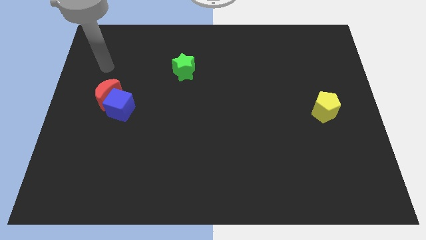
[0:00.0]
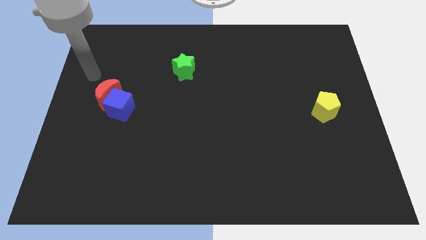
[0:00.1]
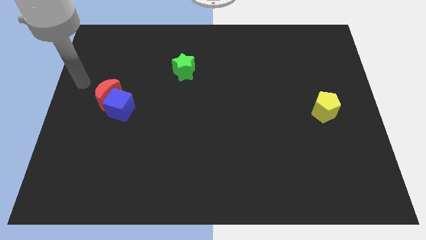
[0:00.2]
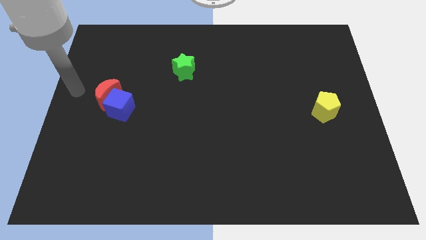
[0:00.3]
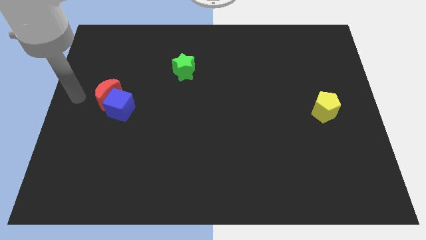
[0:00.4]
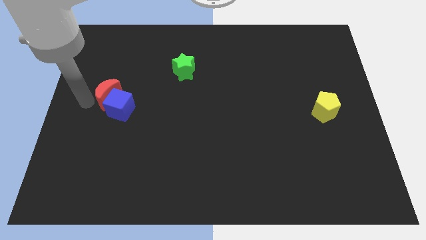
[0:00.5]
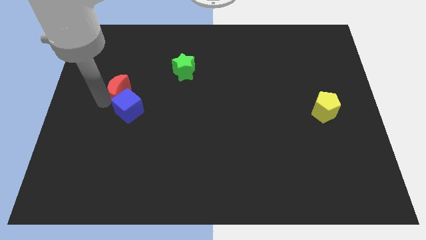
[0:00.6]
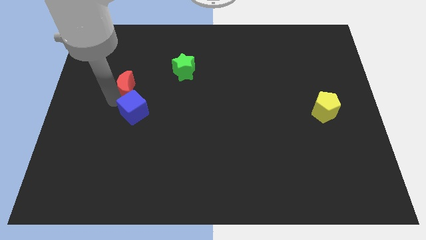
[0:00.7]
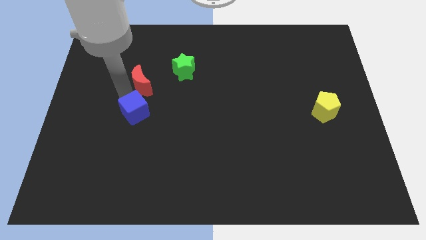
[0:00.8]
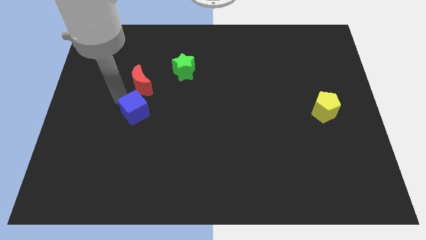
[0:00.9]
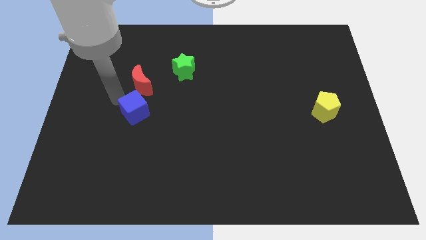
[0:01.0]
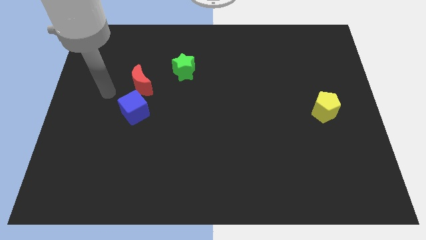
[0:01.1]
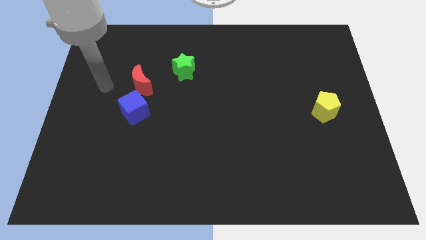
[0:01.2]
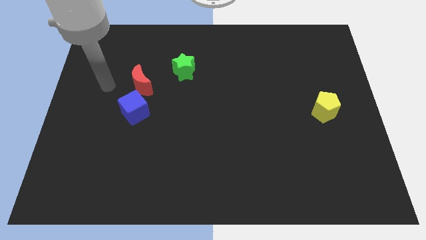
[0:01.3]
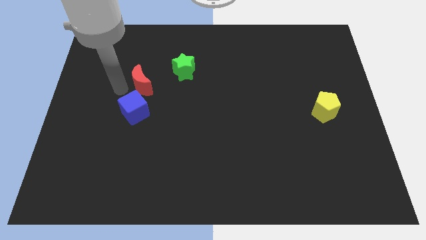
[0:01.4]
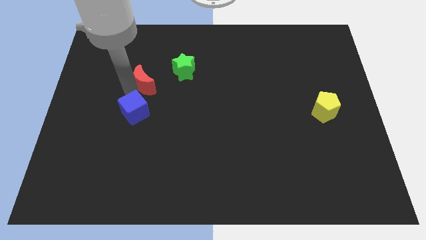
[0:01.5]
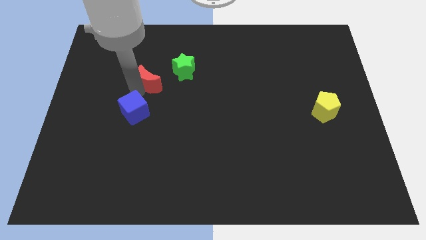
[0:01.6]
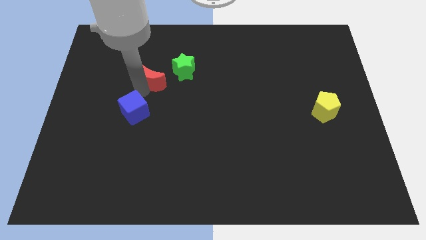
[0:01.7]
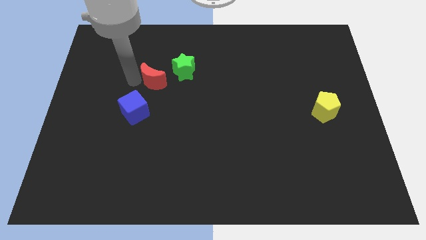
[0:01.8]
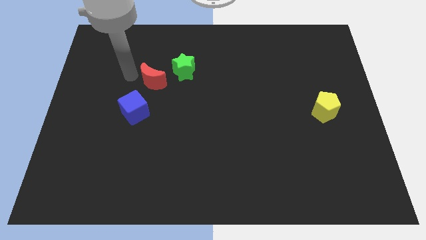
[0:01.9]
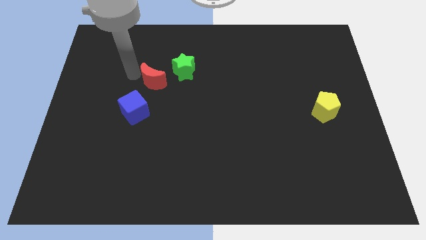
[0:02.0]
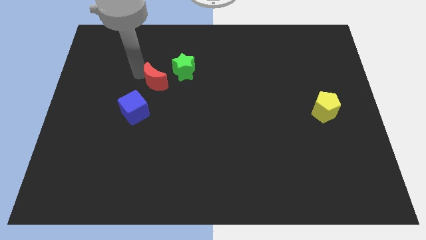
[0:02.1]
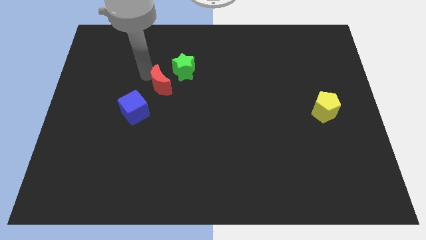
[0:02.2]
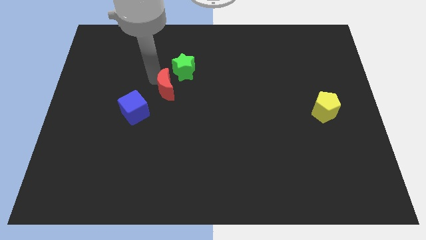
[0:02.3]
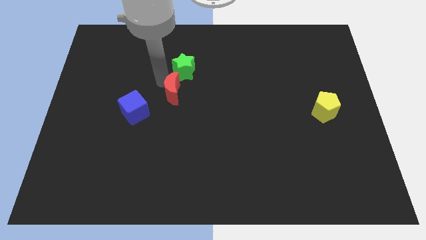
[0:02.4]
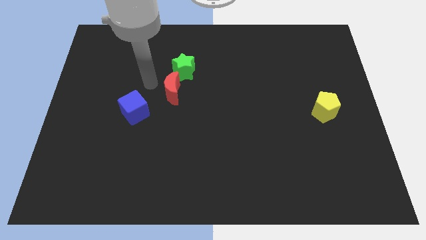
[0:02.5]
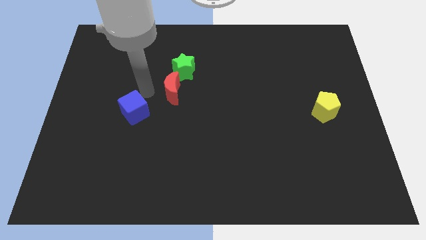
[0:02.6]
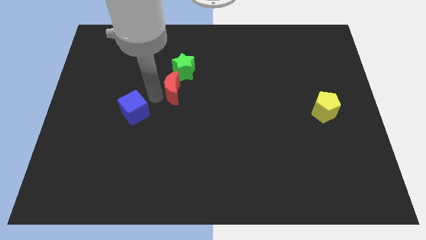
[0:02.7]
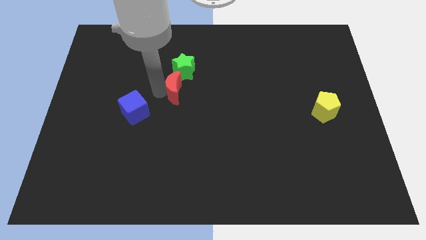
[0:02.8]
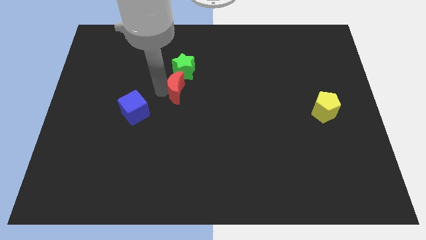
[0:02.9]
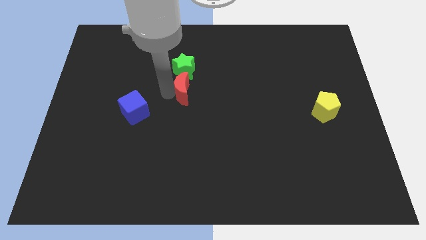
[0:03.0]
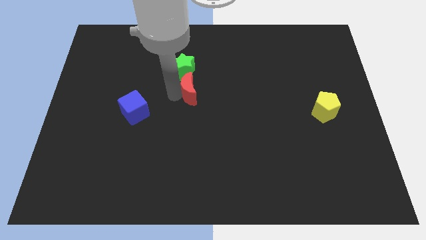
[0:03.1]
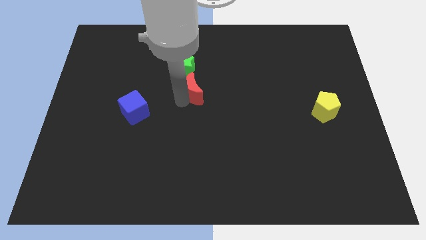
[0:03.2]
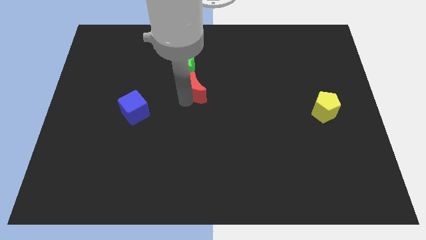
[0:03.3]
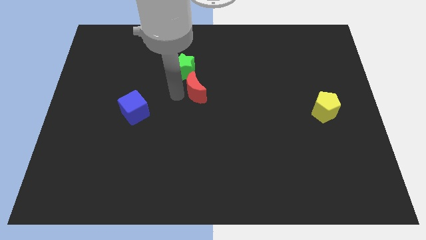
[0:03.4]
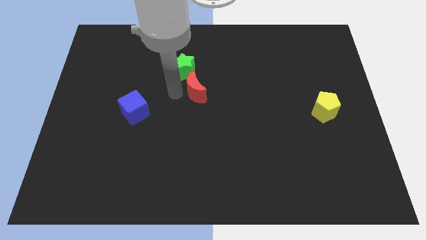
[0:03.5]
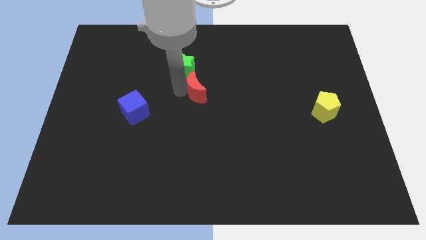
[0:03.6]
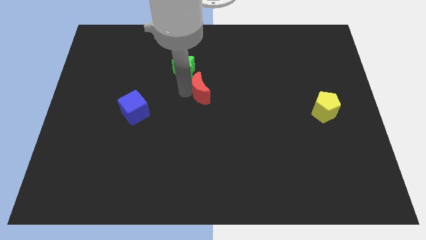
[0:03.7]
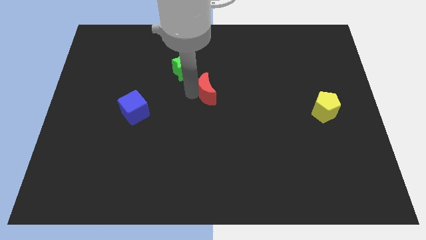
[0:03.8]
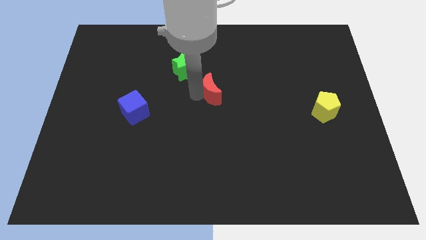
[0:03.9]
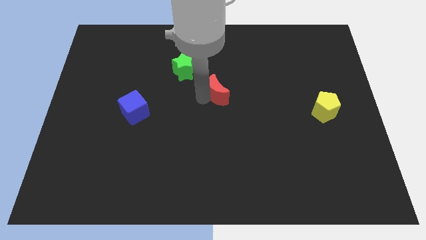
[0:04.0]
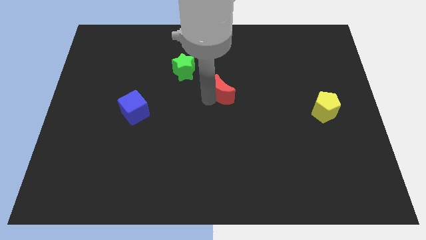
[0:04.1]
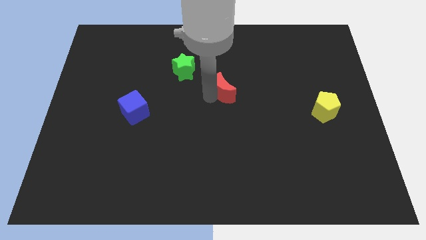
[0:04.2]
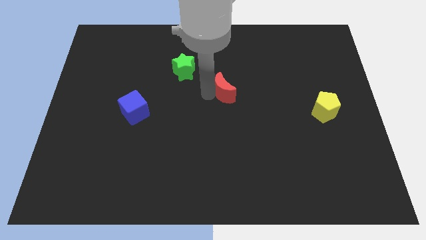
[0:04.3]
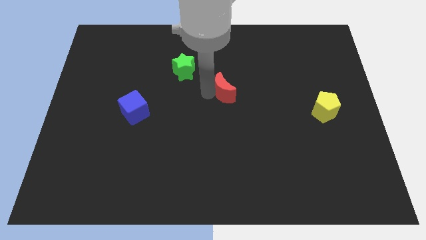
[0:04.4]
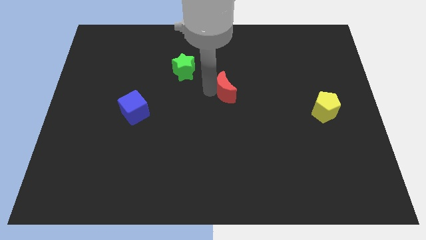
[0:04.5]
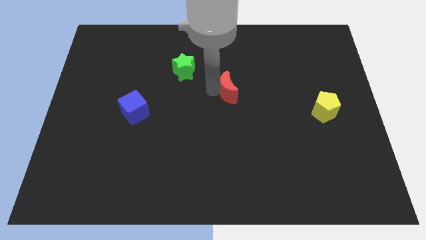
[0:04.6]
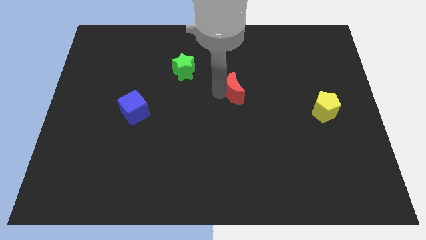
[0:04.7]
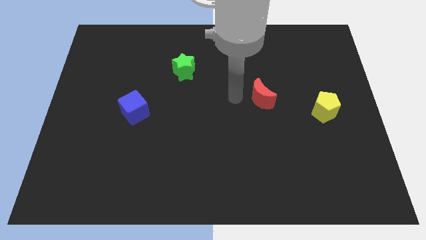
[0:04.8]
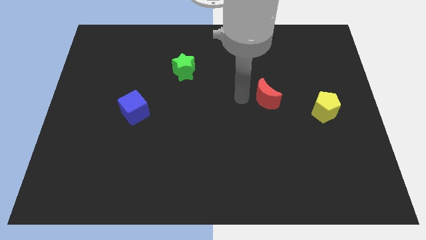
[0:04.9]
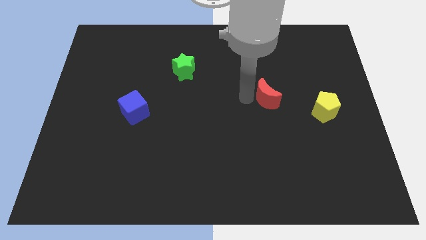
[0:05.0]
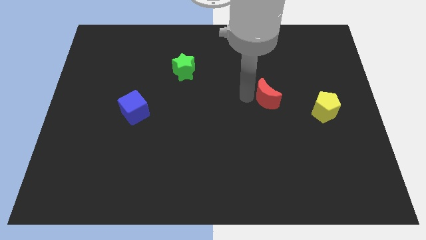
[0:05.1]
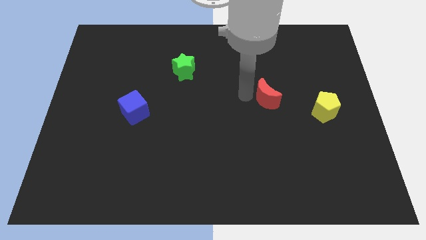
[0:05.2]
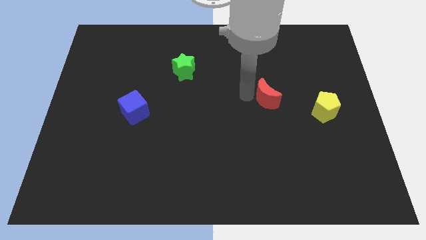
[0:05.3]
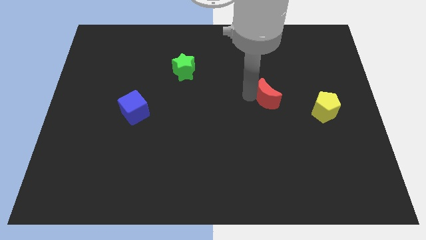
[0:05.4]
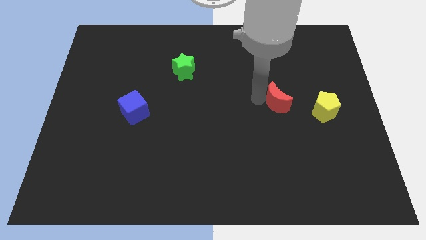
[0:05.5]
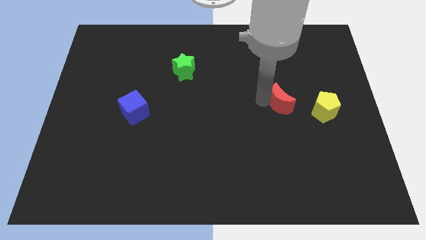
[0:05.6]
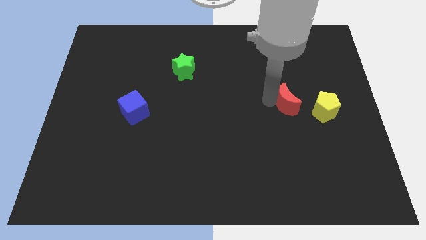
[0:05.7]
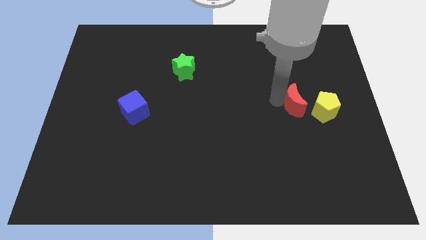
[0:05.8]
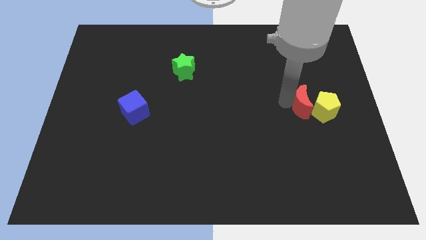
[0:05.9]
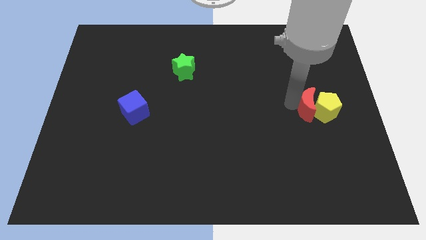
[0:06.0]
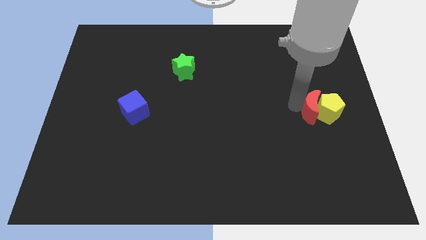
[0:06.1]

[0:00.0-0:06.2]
slide the moon to the pentagon

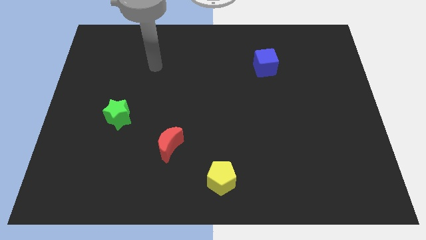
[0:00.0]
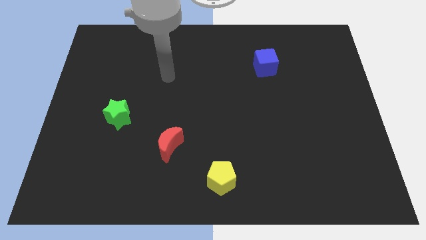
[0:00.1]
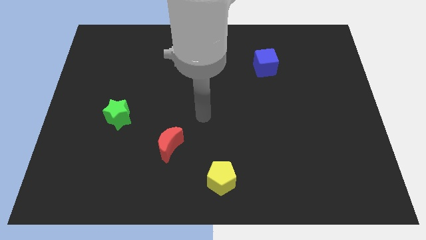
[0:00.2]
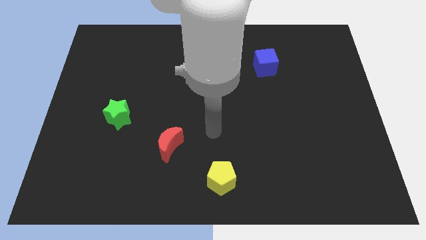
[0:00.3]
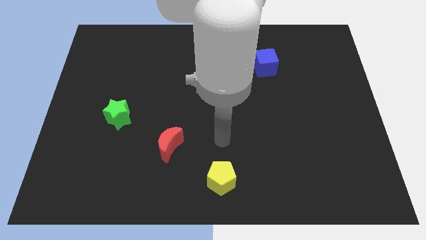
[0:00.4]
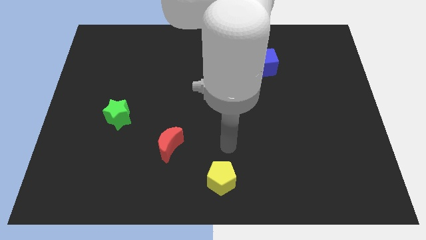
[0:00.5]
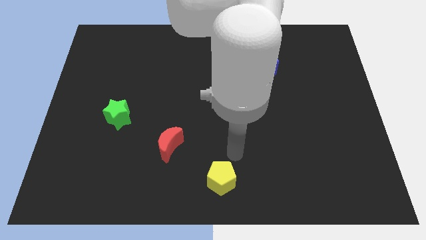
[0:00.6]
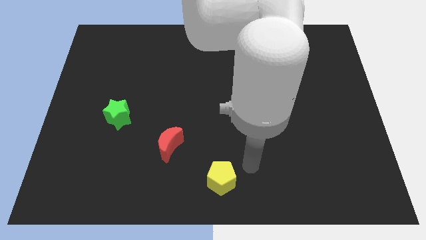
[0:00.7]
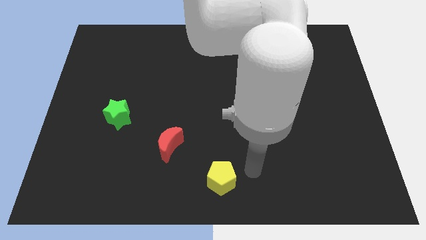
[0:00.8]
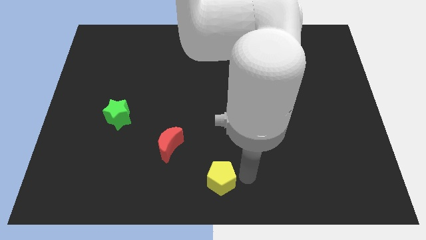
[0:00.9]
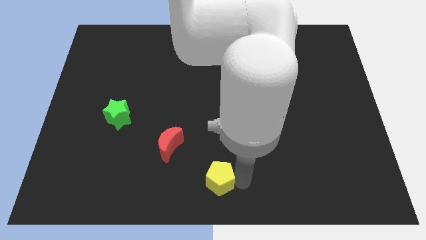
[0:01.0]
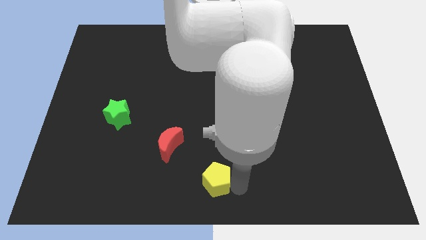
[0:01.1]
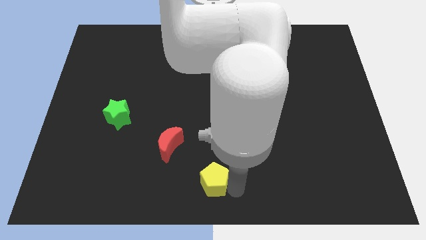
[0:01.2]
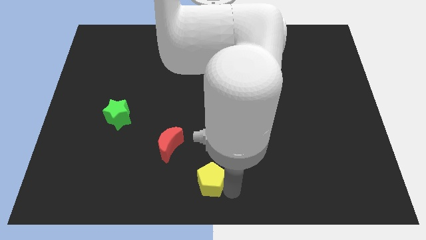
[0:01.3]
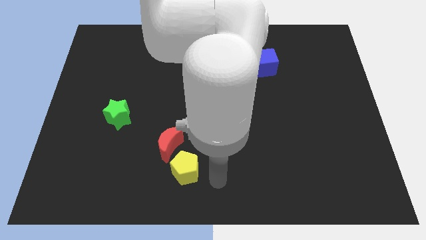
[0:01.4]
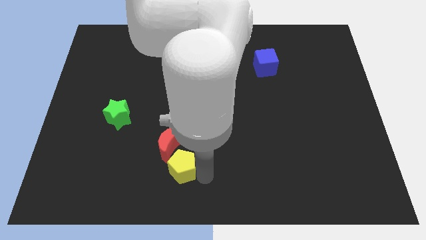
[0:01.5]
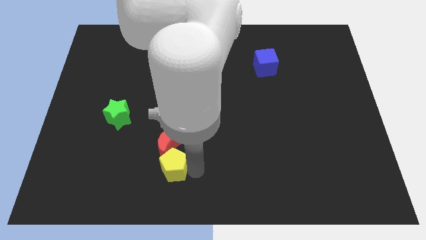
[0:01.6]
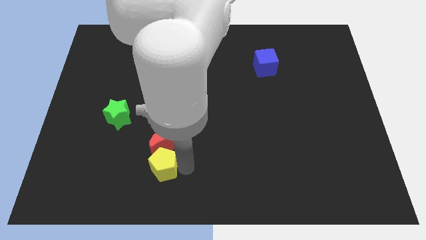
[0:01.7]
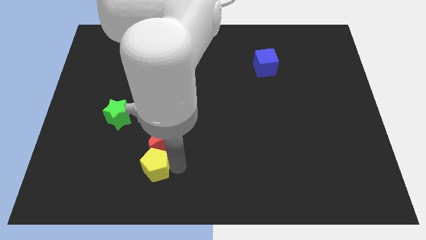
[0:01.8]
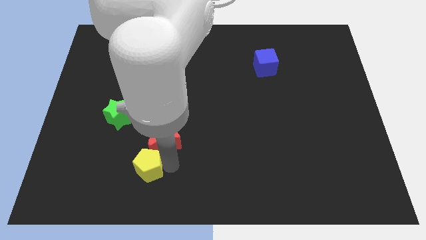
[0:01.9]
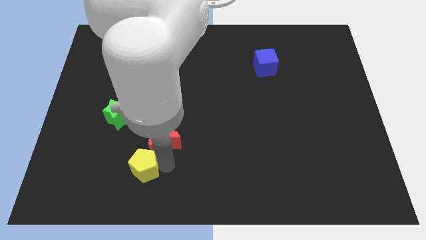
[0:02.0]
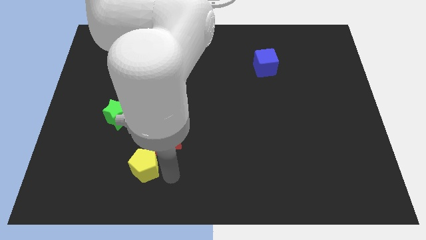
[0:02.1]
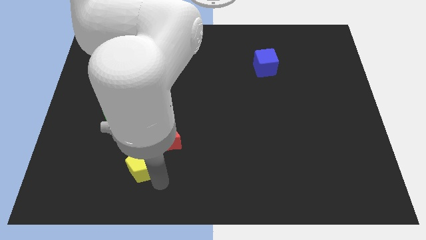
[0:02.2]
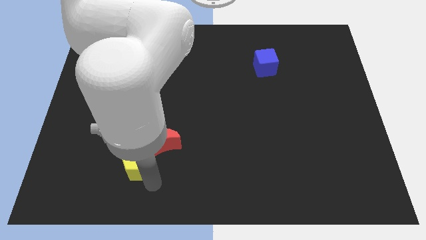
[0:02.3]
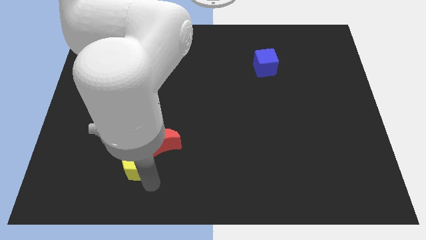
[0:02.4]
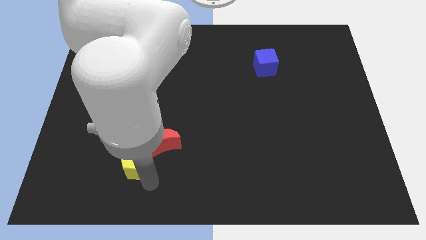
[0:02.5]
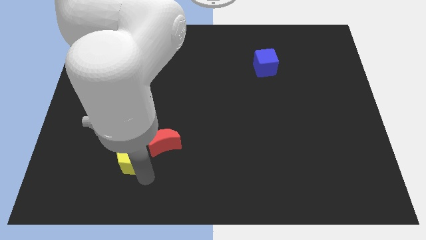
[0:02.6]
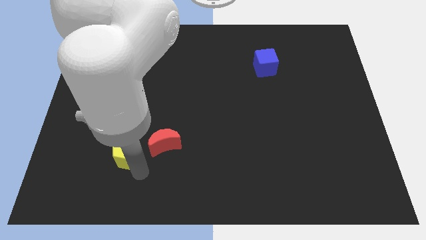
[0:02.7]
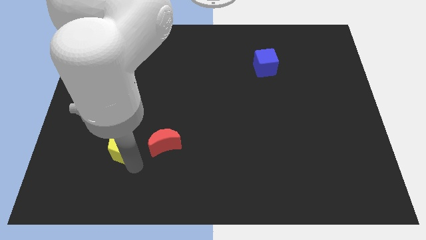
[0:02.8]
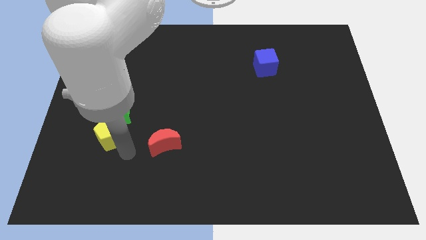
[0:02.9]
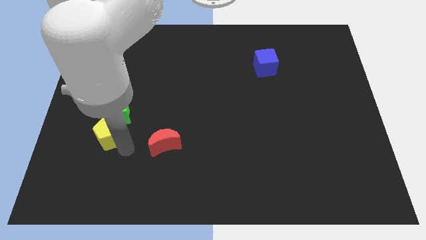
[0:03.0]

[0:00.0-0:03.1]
slide the yellow pentagon close to the star
